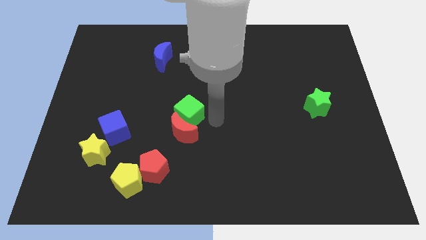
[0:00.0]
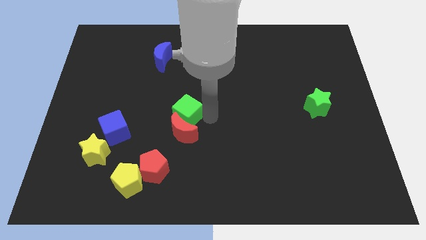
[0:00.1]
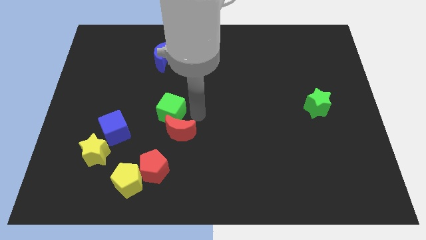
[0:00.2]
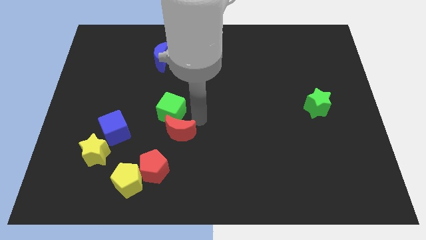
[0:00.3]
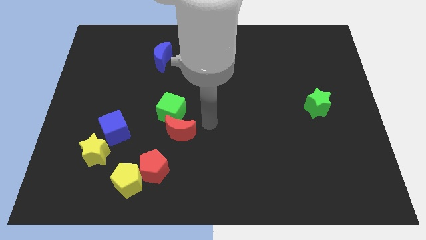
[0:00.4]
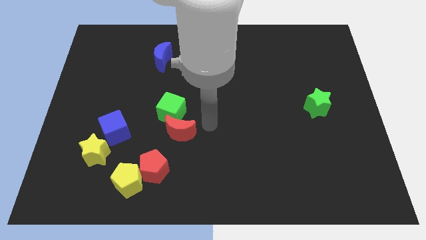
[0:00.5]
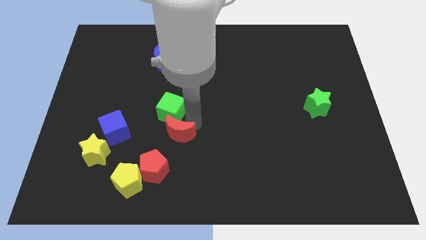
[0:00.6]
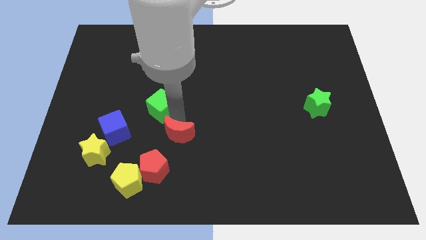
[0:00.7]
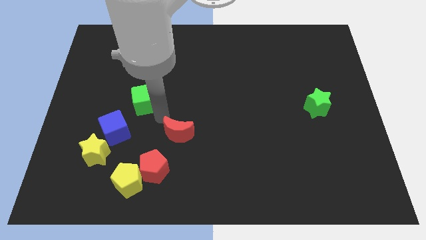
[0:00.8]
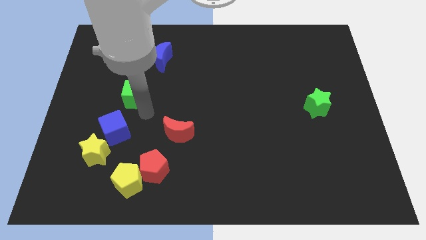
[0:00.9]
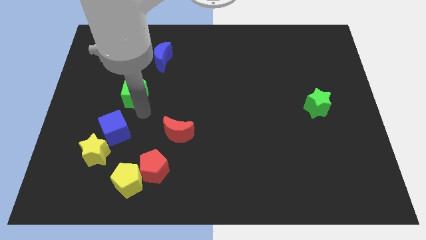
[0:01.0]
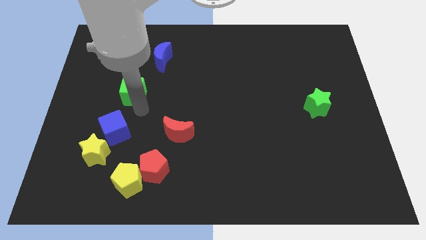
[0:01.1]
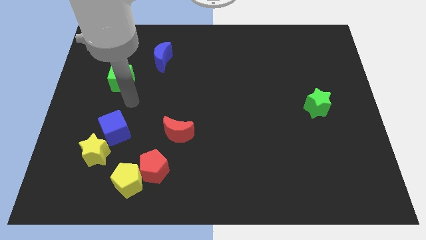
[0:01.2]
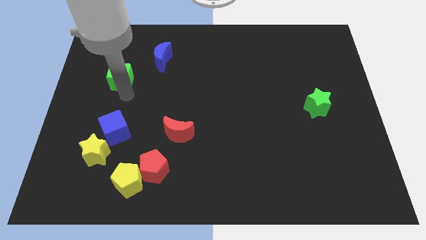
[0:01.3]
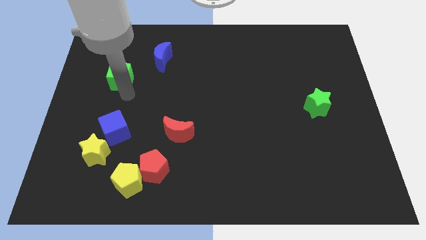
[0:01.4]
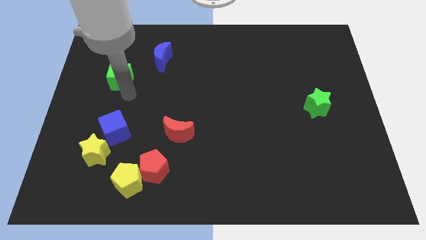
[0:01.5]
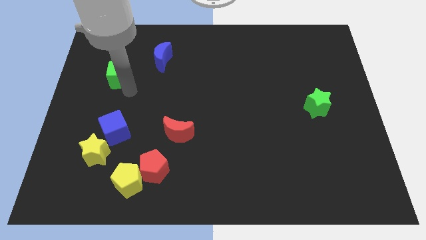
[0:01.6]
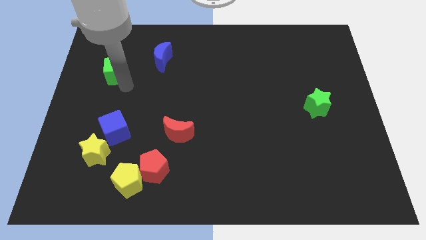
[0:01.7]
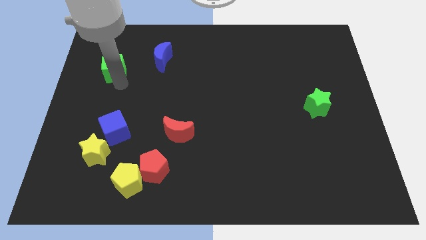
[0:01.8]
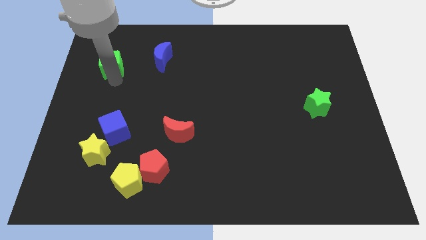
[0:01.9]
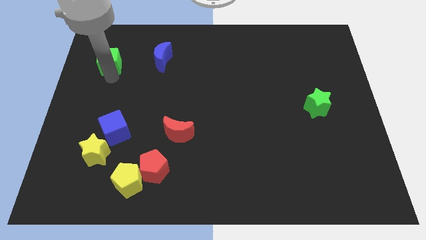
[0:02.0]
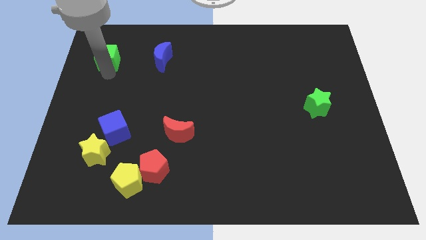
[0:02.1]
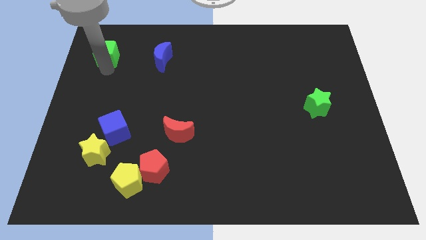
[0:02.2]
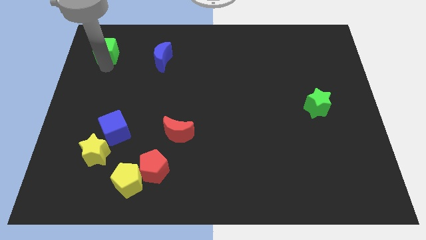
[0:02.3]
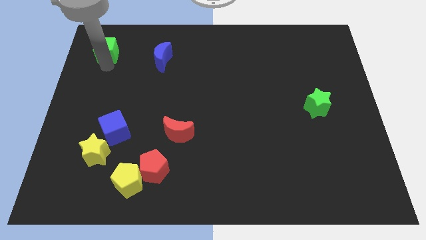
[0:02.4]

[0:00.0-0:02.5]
push the green cube to the left of the blue crescent

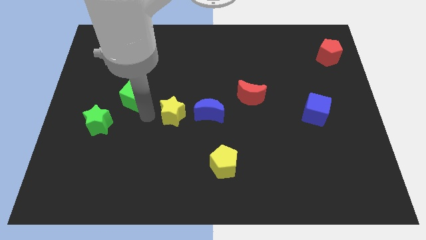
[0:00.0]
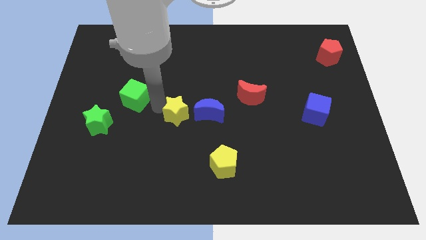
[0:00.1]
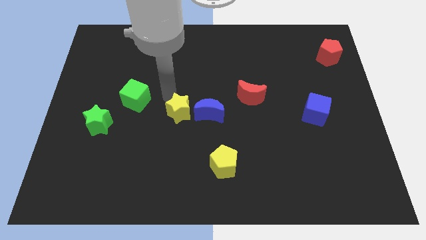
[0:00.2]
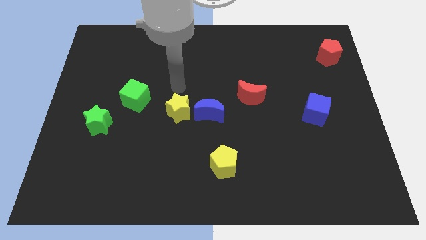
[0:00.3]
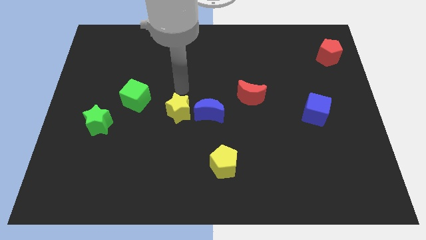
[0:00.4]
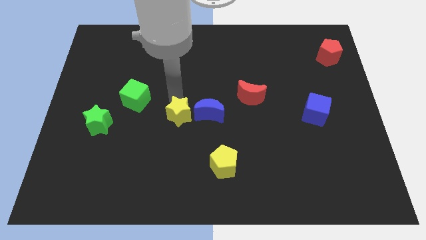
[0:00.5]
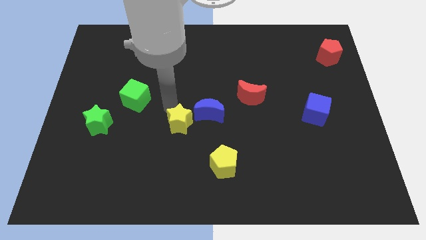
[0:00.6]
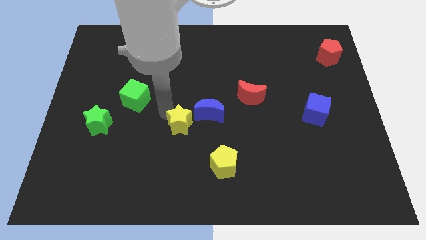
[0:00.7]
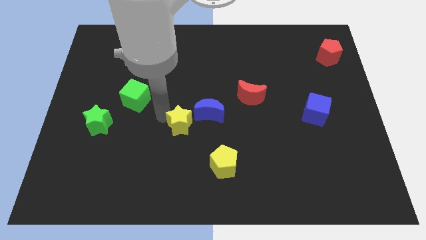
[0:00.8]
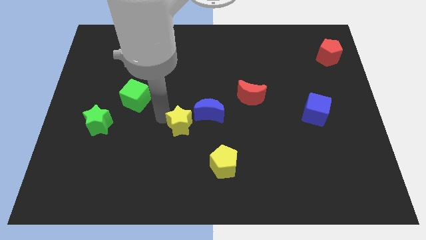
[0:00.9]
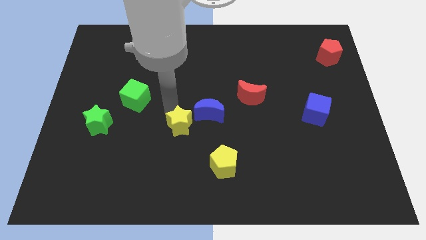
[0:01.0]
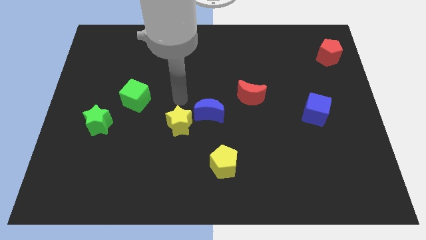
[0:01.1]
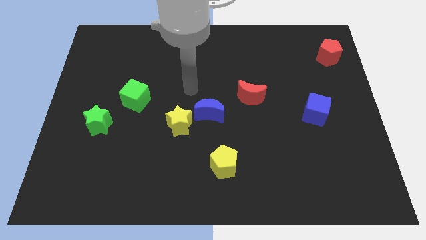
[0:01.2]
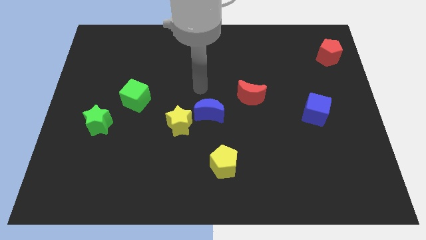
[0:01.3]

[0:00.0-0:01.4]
move the yellow star slightly down

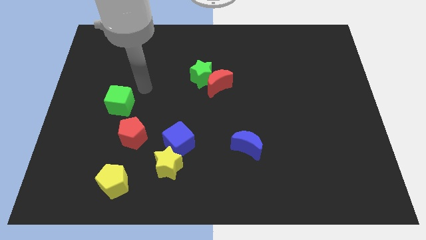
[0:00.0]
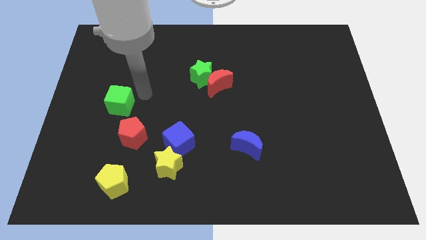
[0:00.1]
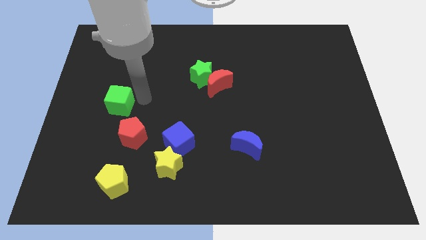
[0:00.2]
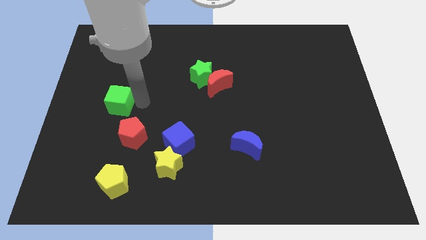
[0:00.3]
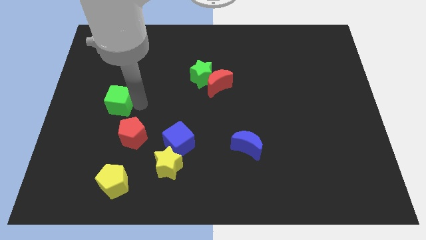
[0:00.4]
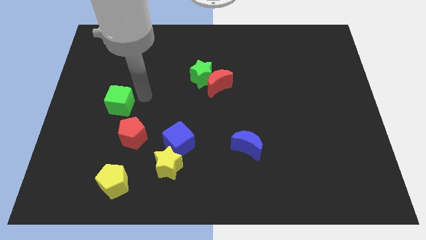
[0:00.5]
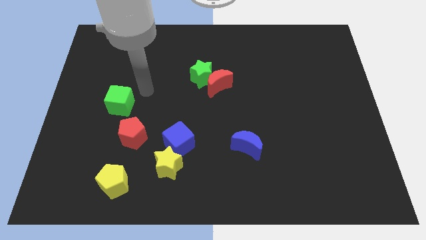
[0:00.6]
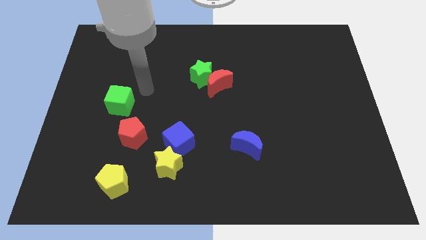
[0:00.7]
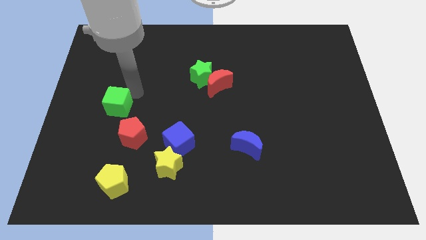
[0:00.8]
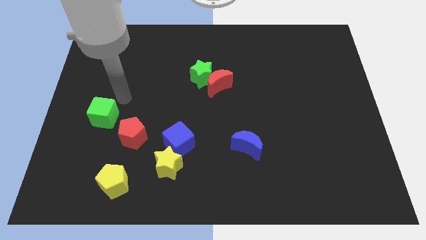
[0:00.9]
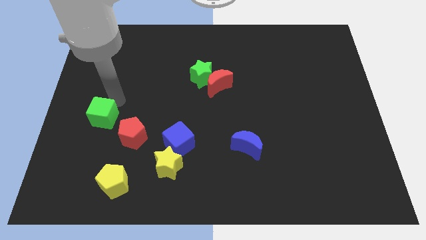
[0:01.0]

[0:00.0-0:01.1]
push the green cube slightly to the bottom

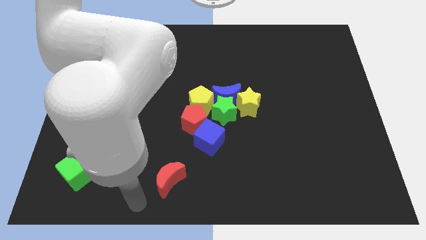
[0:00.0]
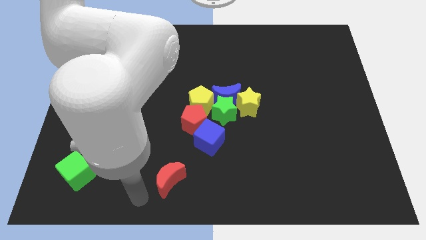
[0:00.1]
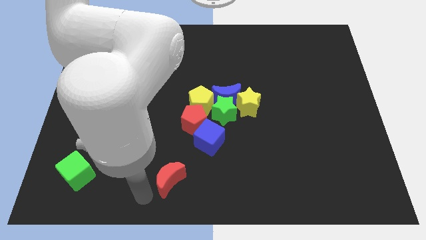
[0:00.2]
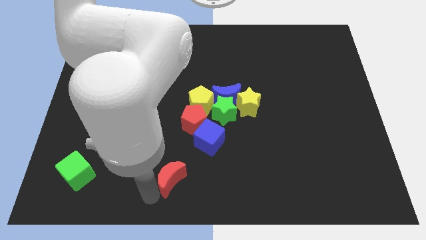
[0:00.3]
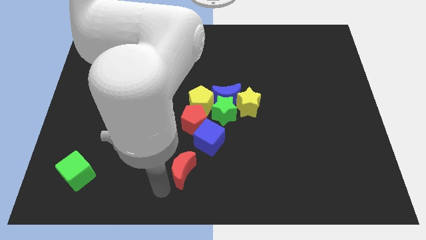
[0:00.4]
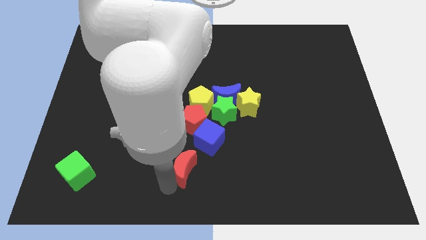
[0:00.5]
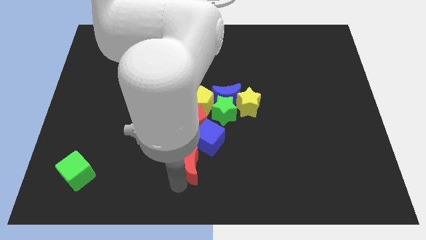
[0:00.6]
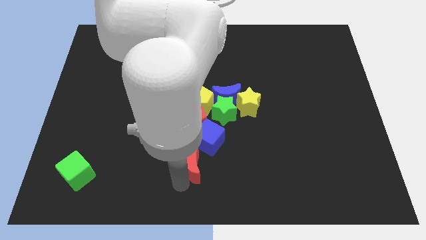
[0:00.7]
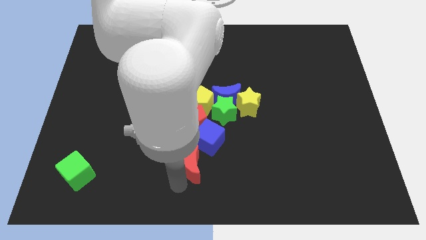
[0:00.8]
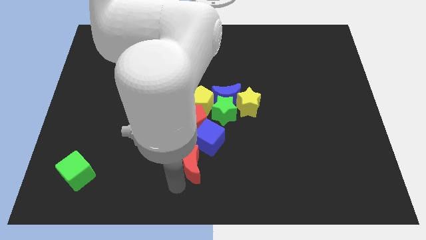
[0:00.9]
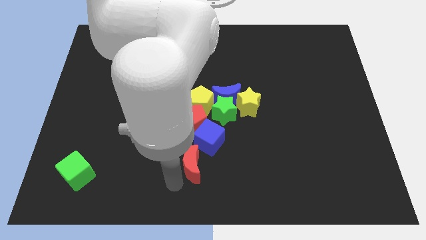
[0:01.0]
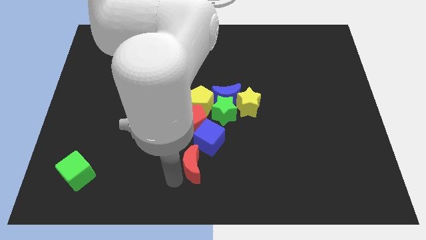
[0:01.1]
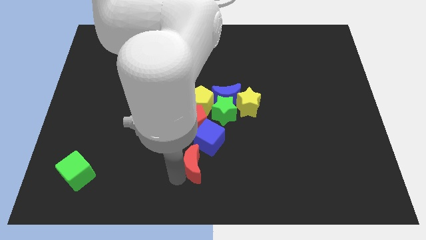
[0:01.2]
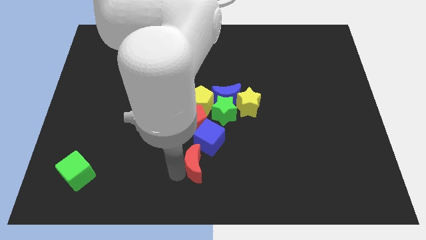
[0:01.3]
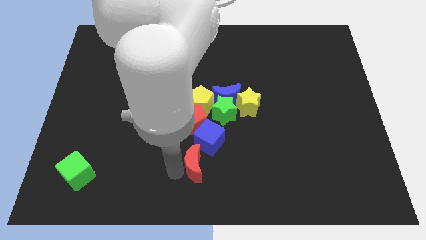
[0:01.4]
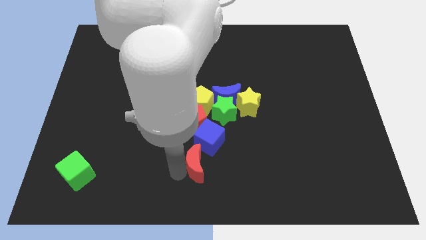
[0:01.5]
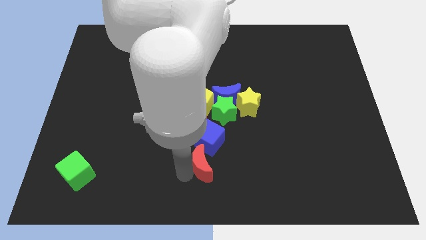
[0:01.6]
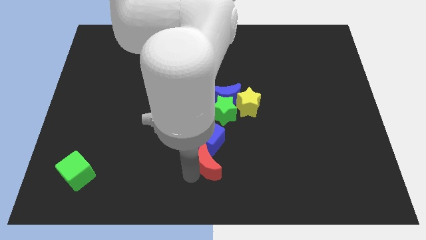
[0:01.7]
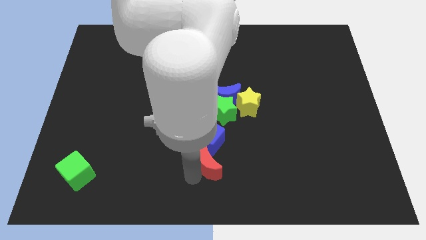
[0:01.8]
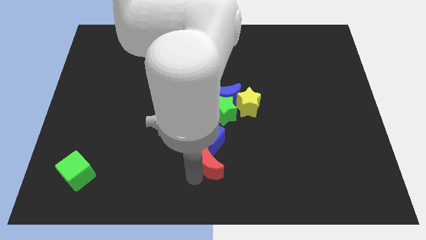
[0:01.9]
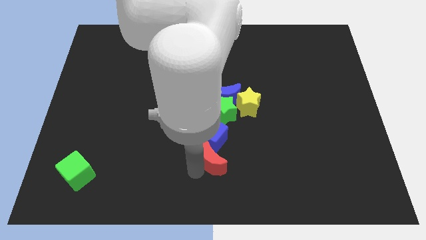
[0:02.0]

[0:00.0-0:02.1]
push the red moon into the blue cube

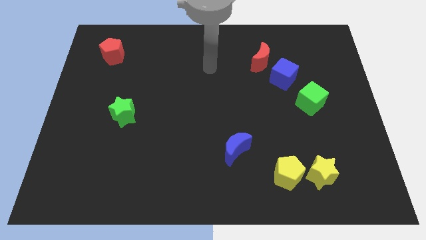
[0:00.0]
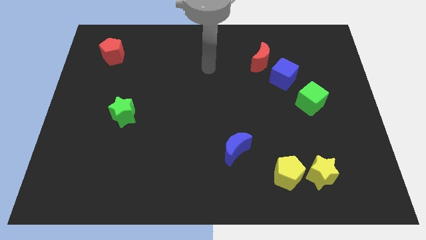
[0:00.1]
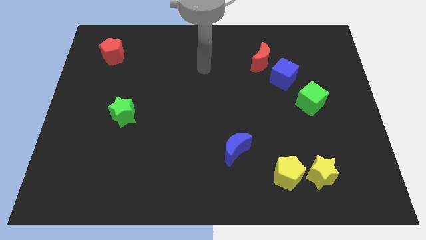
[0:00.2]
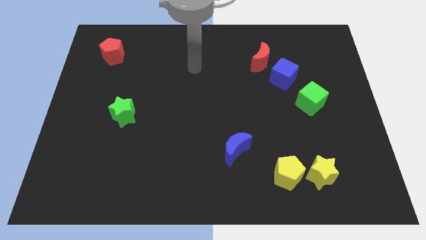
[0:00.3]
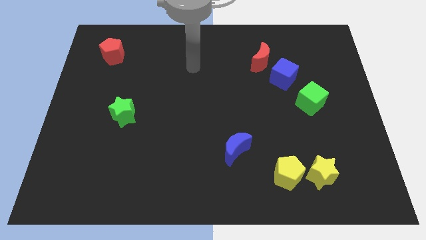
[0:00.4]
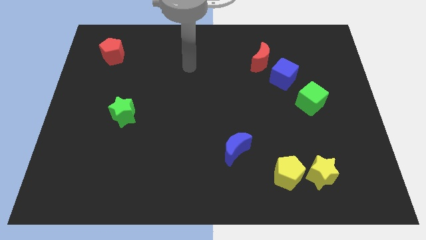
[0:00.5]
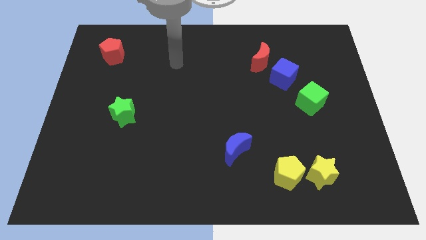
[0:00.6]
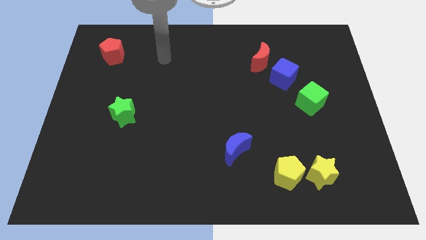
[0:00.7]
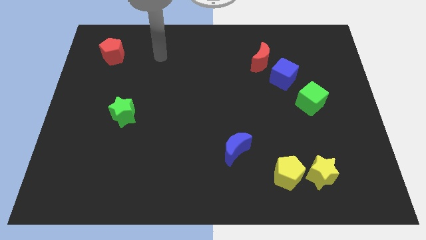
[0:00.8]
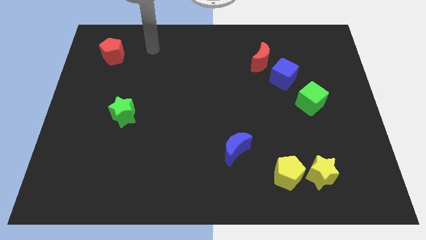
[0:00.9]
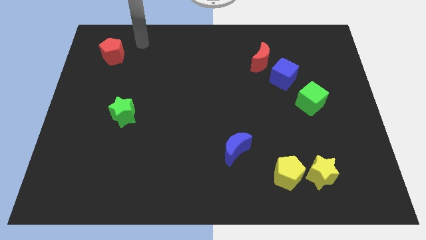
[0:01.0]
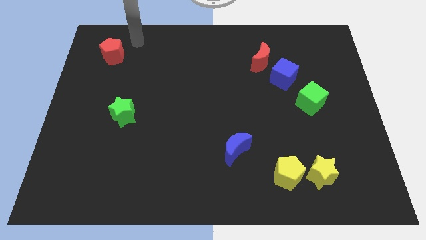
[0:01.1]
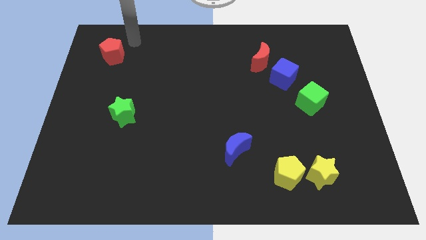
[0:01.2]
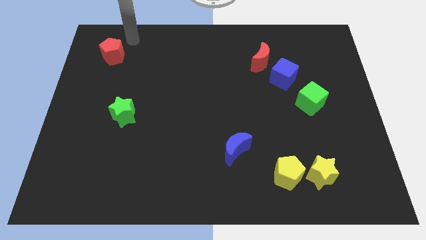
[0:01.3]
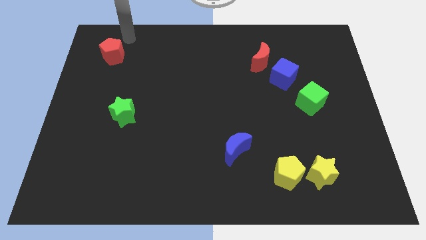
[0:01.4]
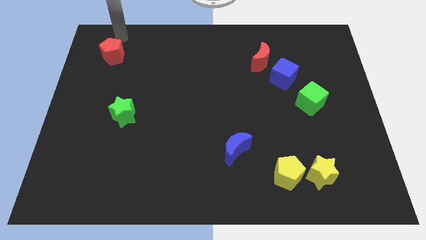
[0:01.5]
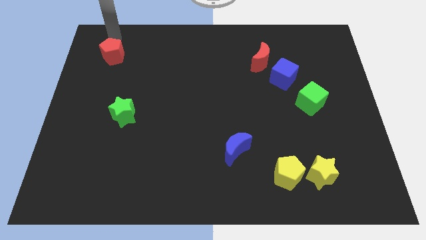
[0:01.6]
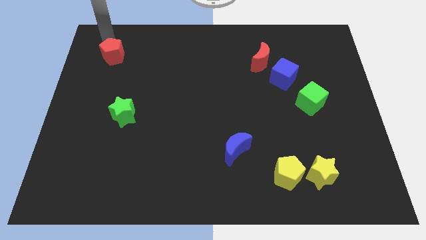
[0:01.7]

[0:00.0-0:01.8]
put your hand vertically above the red pentagon

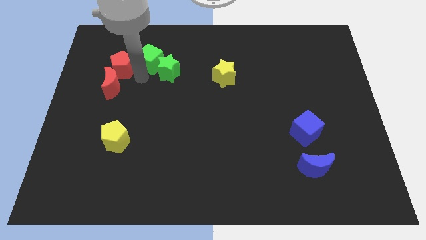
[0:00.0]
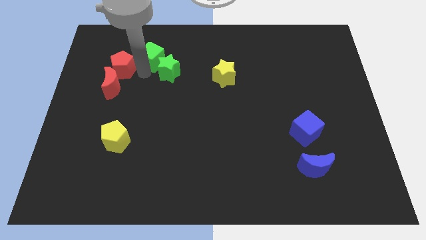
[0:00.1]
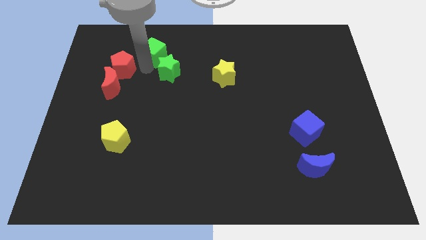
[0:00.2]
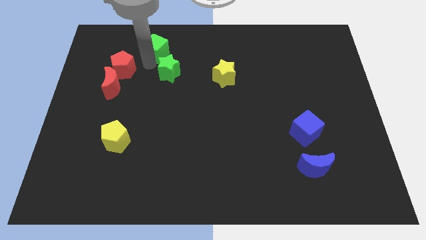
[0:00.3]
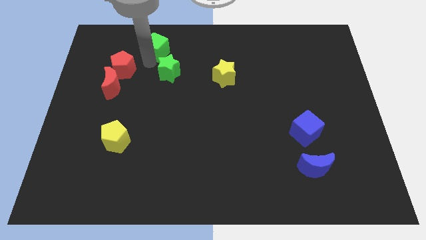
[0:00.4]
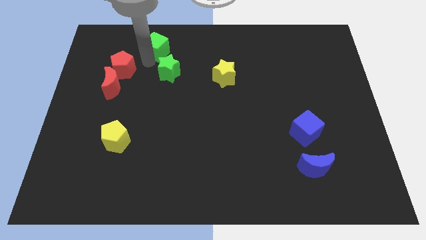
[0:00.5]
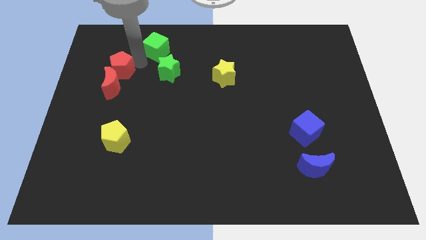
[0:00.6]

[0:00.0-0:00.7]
push the green cube slightly above the green star
